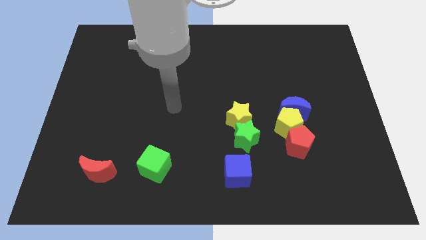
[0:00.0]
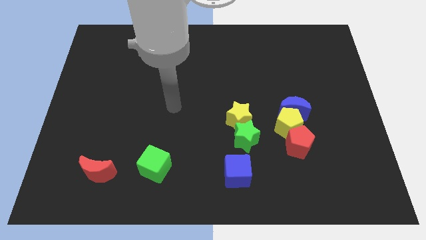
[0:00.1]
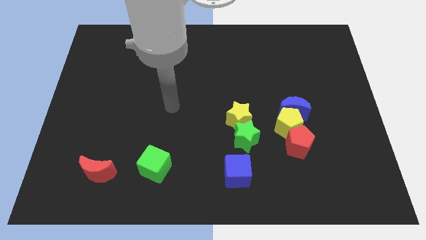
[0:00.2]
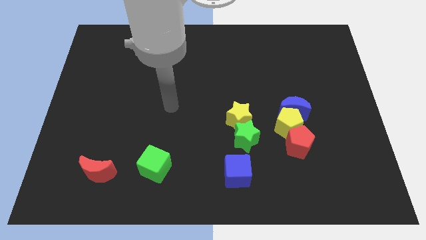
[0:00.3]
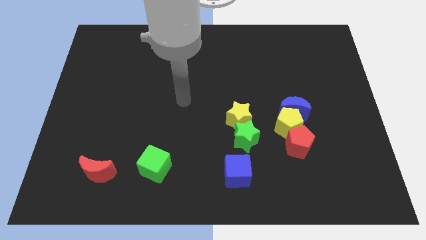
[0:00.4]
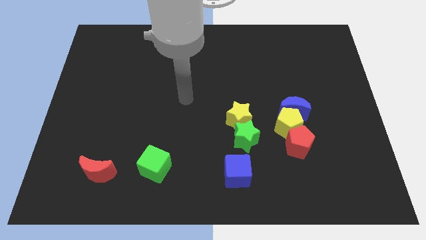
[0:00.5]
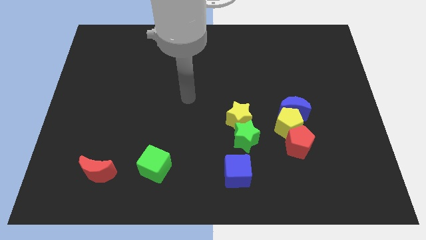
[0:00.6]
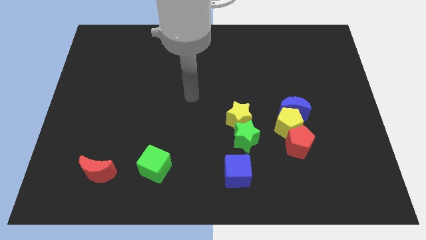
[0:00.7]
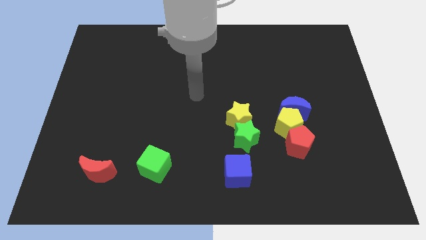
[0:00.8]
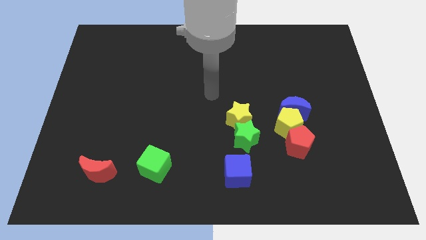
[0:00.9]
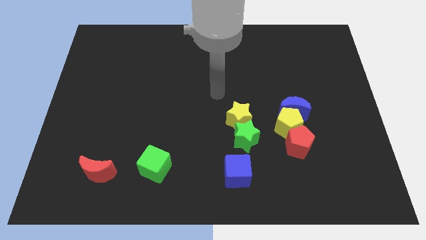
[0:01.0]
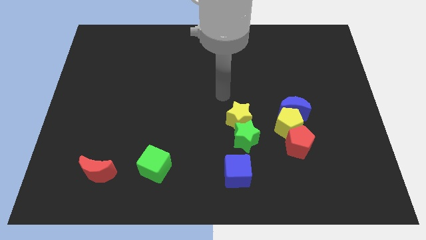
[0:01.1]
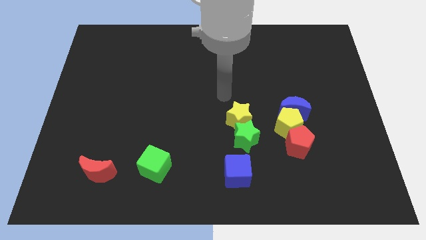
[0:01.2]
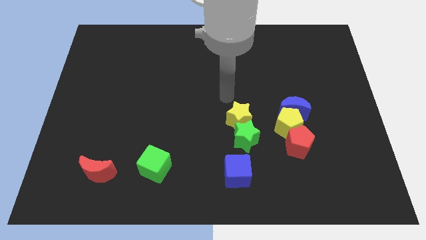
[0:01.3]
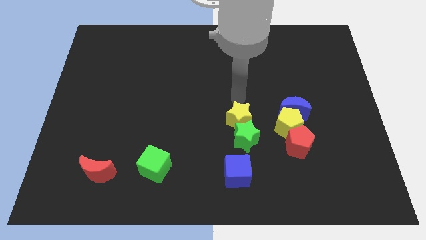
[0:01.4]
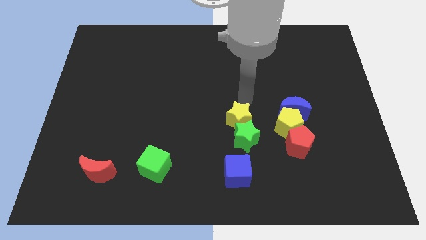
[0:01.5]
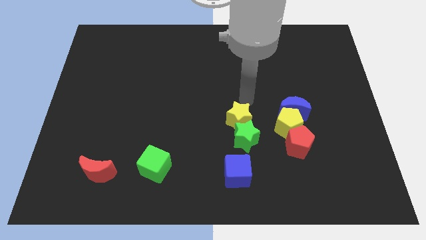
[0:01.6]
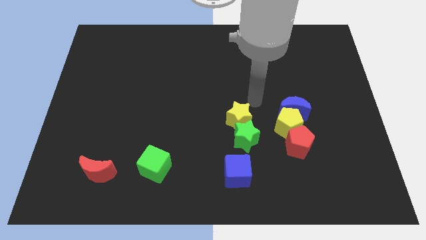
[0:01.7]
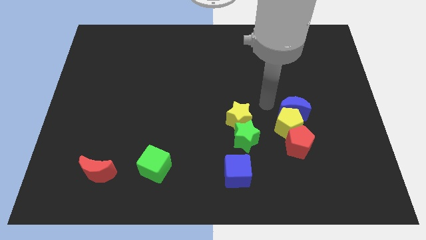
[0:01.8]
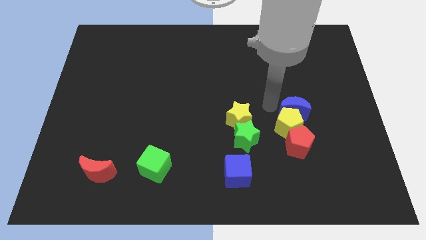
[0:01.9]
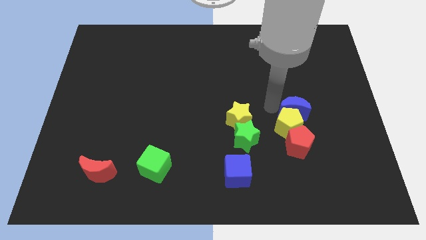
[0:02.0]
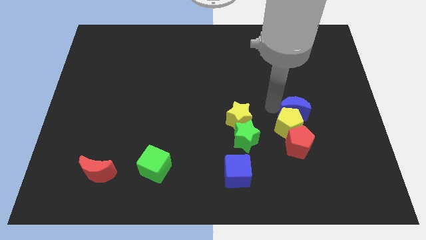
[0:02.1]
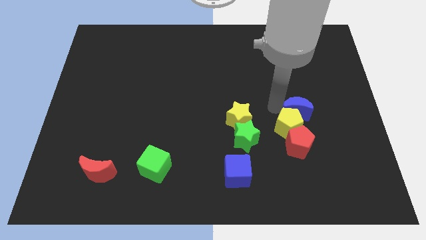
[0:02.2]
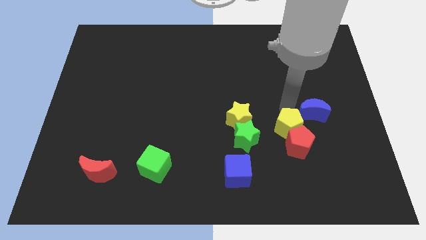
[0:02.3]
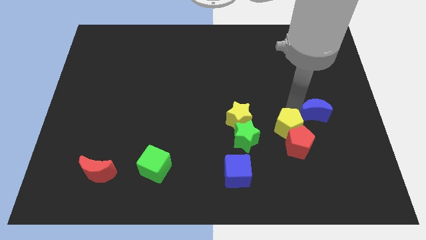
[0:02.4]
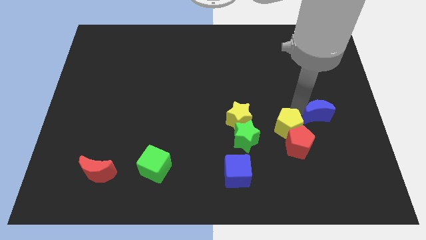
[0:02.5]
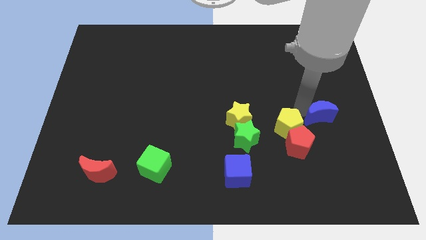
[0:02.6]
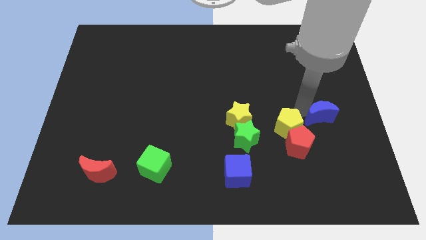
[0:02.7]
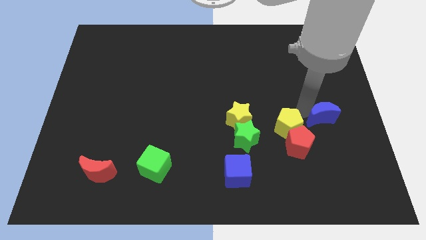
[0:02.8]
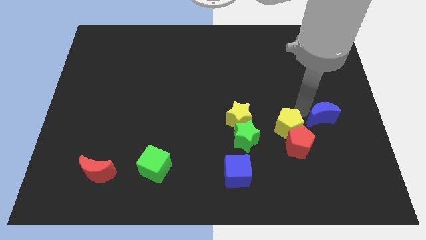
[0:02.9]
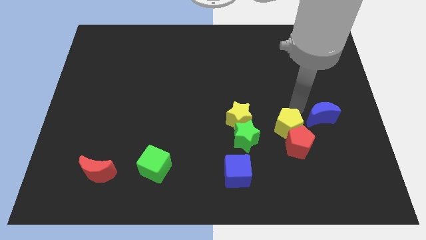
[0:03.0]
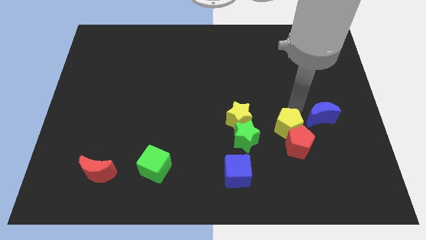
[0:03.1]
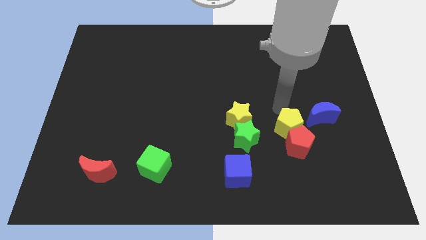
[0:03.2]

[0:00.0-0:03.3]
move the blue moon away from the top side of the yellow pentagon

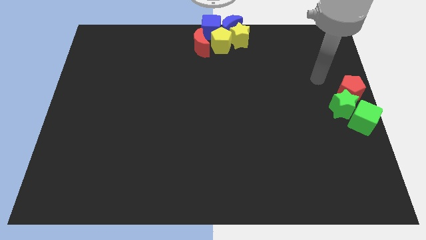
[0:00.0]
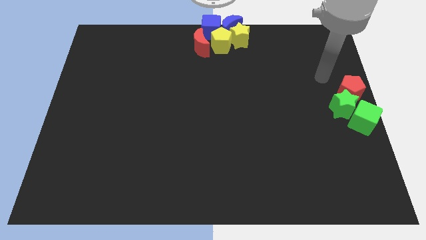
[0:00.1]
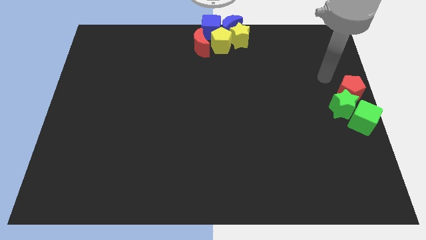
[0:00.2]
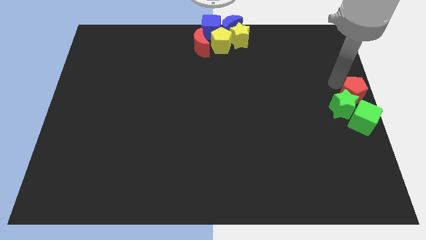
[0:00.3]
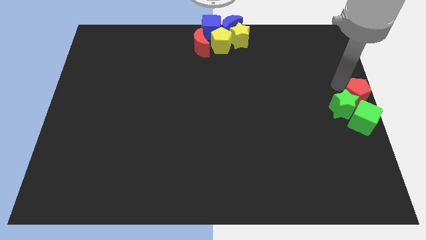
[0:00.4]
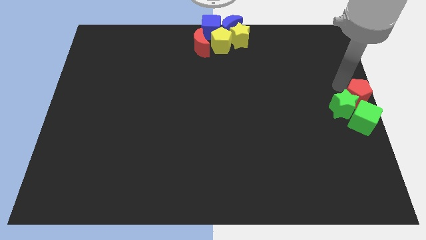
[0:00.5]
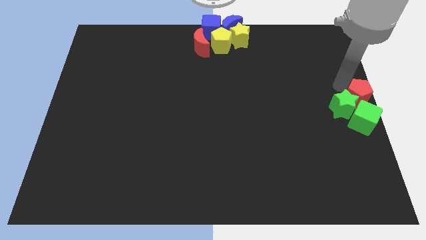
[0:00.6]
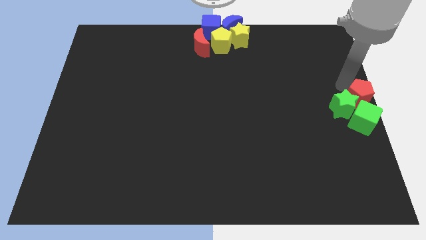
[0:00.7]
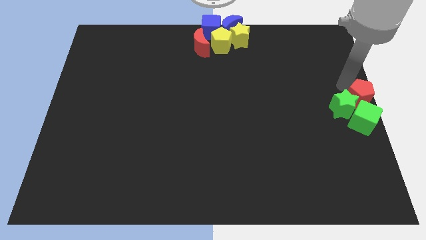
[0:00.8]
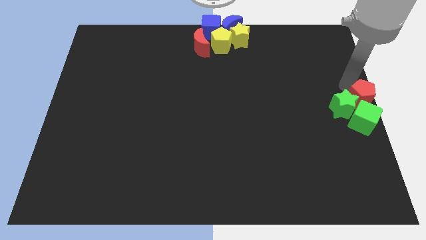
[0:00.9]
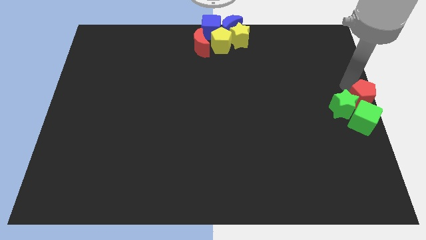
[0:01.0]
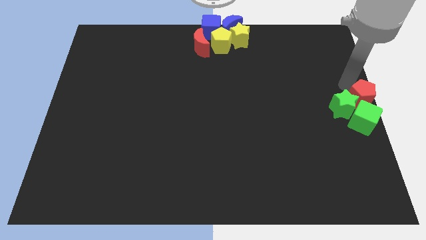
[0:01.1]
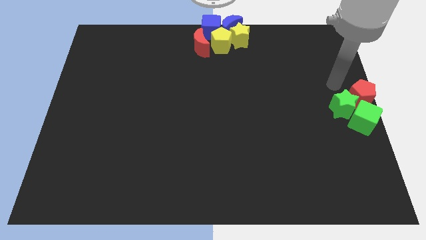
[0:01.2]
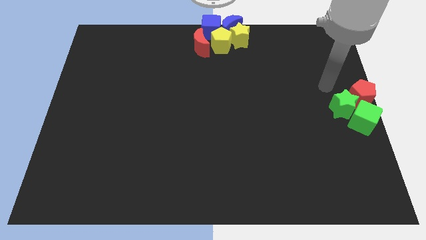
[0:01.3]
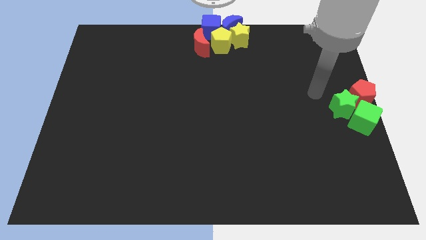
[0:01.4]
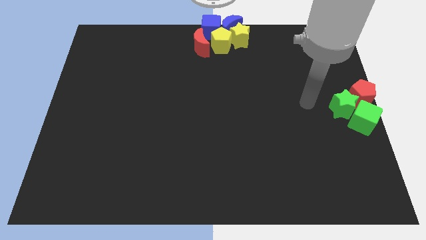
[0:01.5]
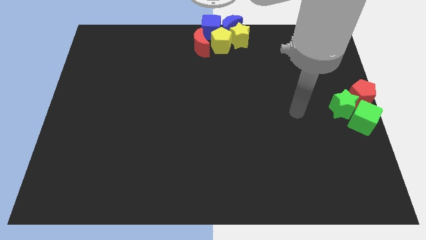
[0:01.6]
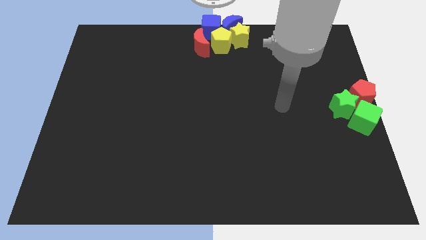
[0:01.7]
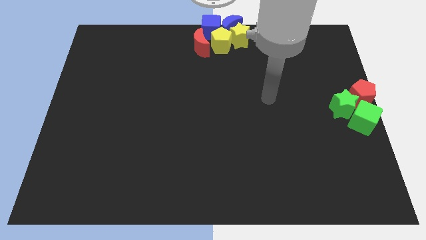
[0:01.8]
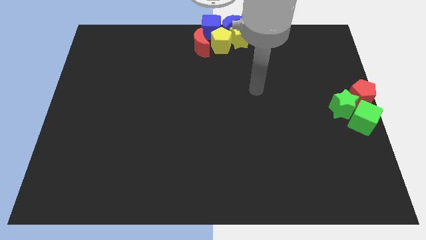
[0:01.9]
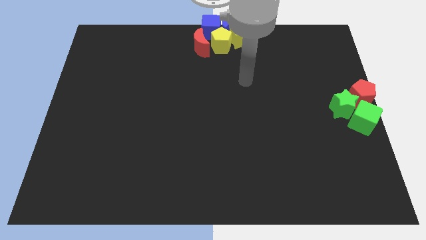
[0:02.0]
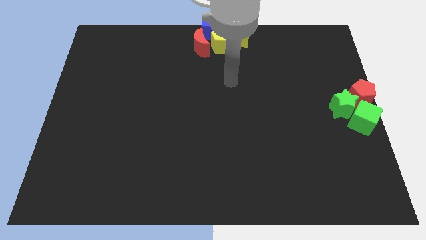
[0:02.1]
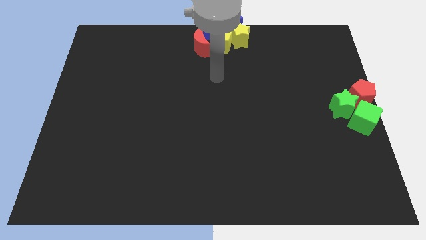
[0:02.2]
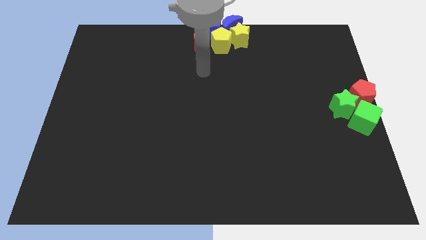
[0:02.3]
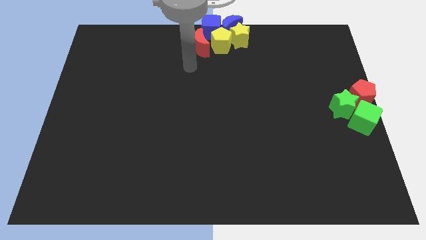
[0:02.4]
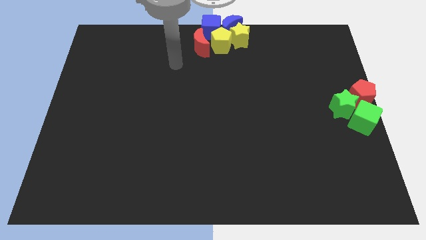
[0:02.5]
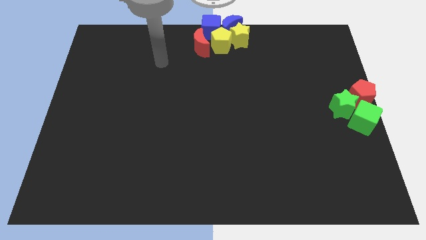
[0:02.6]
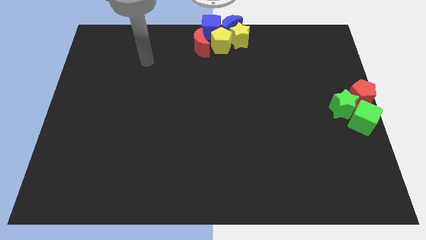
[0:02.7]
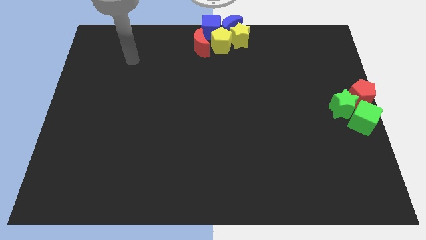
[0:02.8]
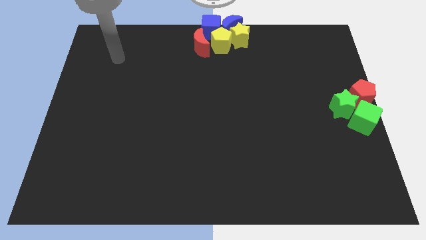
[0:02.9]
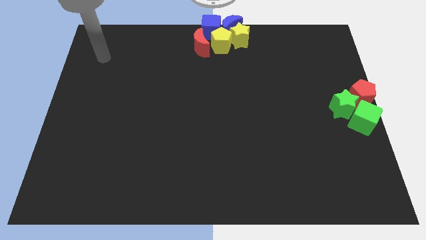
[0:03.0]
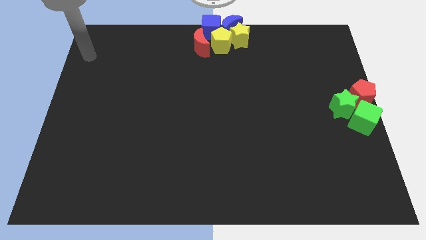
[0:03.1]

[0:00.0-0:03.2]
move your arm towards the top left corner of the board

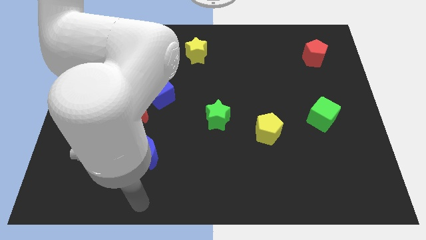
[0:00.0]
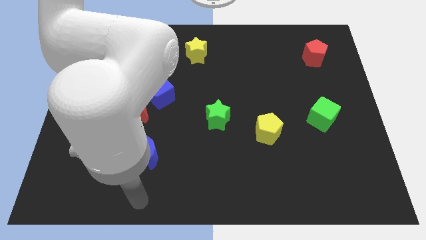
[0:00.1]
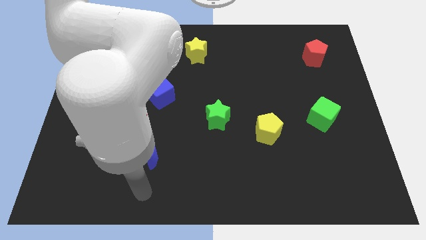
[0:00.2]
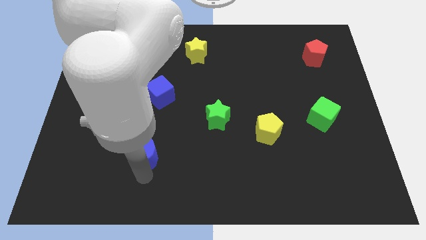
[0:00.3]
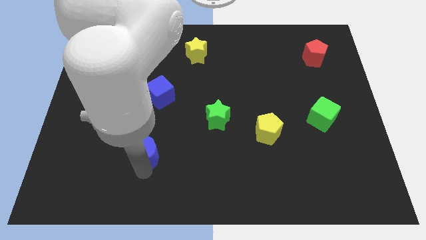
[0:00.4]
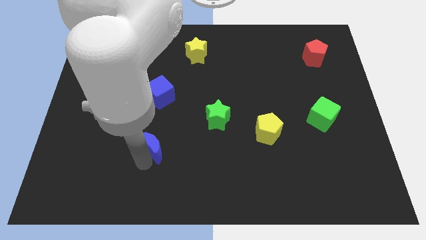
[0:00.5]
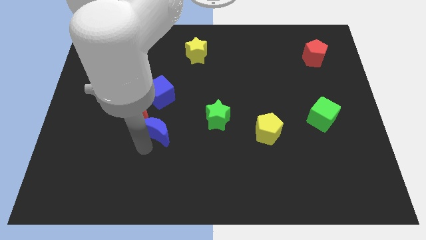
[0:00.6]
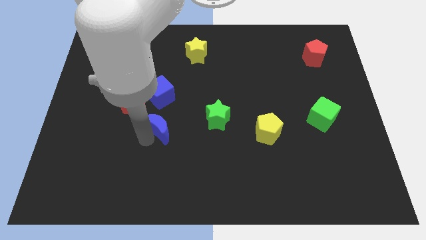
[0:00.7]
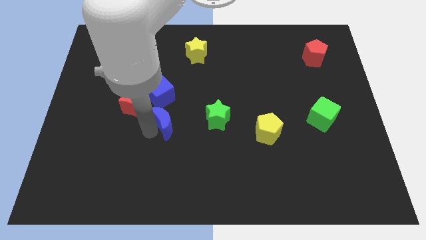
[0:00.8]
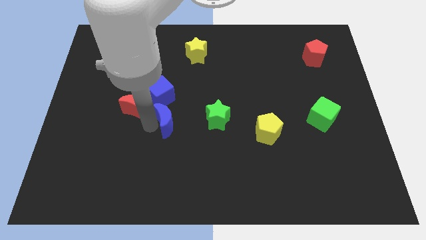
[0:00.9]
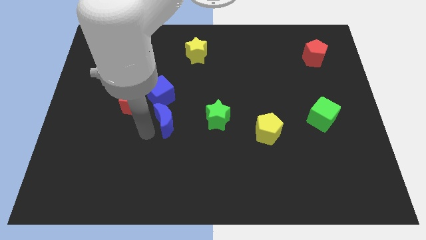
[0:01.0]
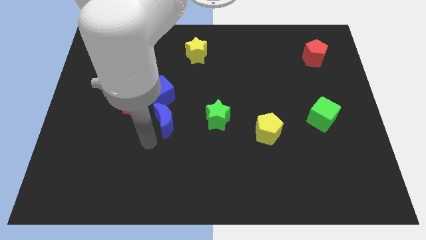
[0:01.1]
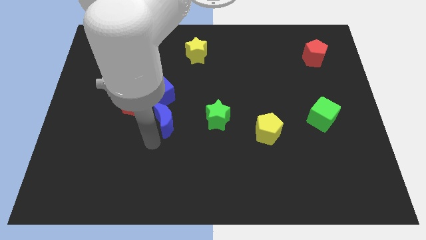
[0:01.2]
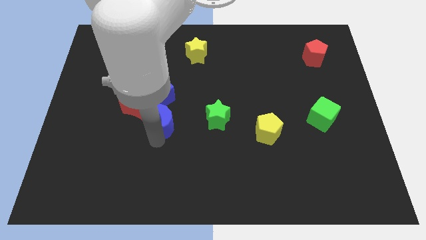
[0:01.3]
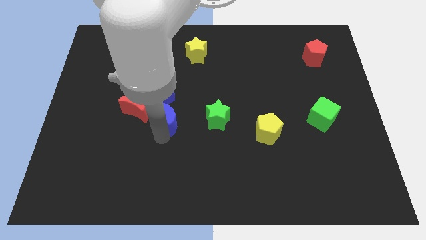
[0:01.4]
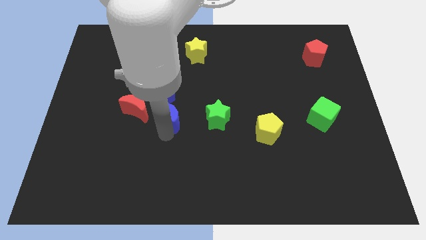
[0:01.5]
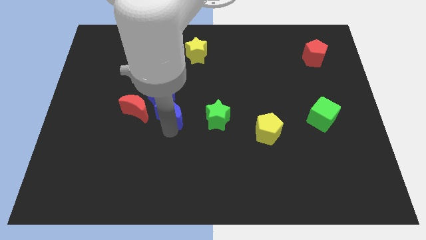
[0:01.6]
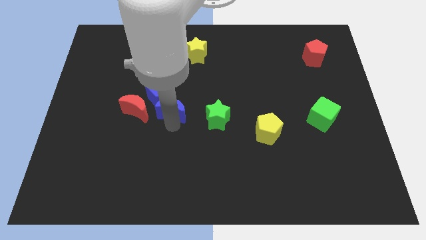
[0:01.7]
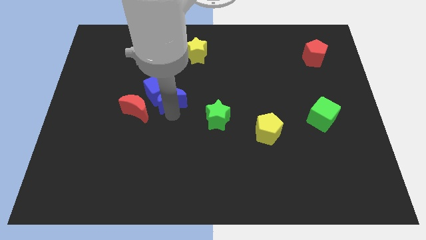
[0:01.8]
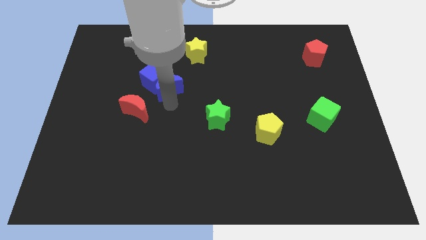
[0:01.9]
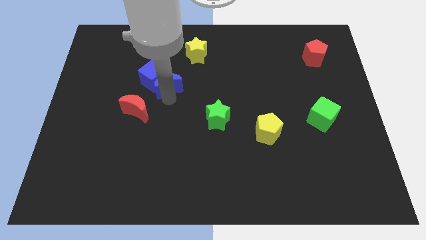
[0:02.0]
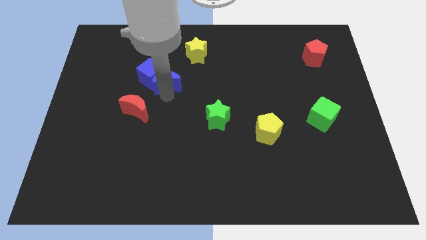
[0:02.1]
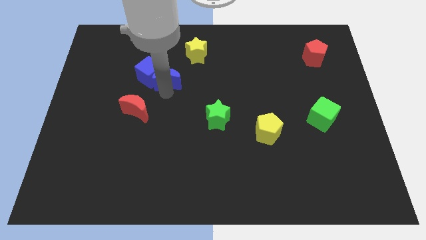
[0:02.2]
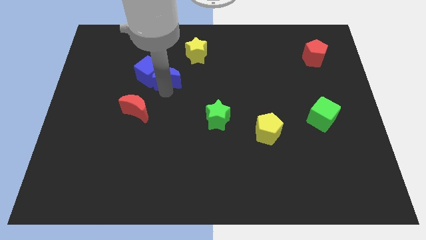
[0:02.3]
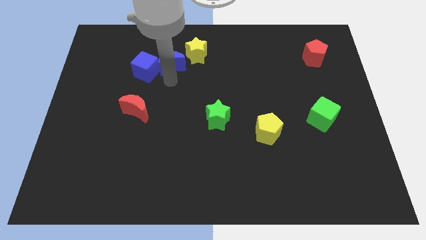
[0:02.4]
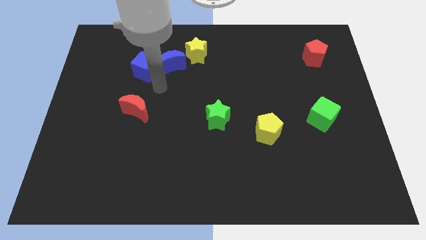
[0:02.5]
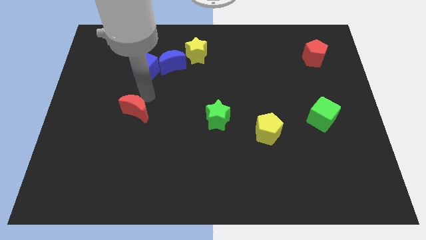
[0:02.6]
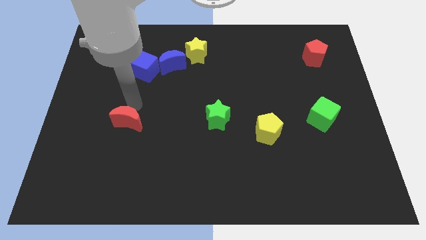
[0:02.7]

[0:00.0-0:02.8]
place blue moon to the left of yellow star
